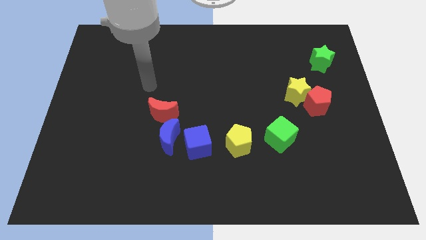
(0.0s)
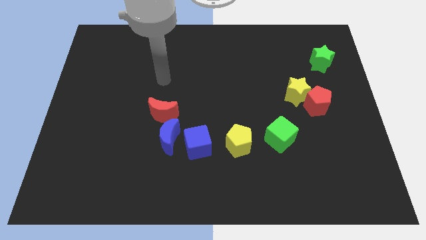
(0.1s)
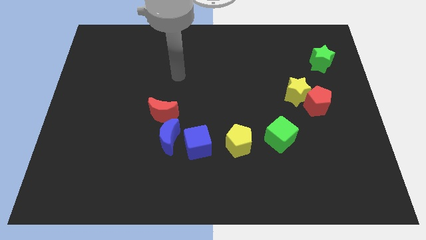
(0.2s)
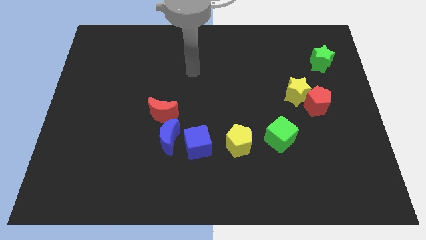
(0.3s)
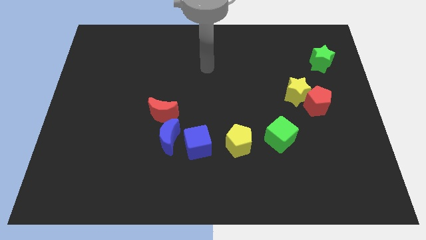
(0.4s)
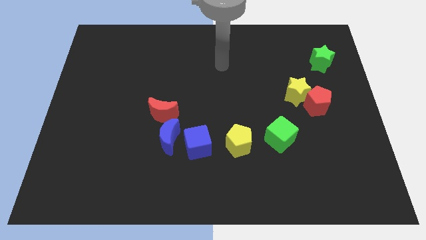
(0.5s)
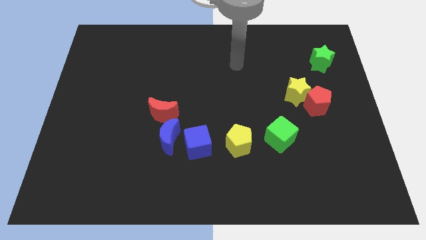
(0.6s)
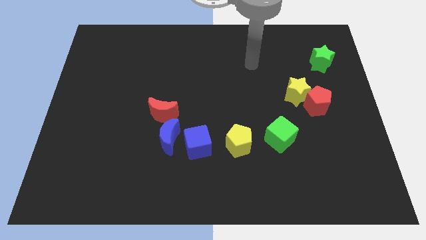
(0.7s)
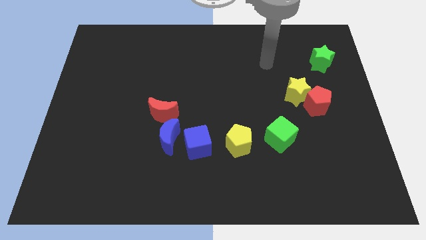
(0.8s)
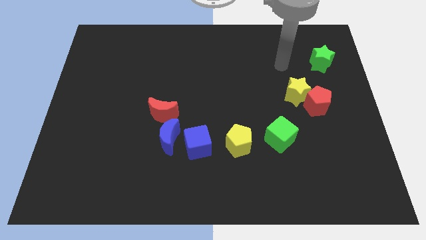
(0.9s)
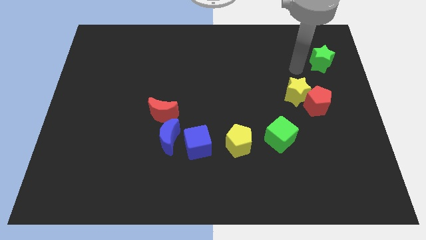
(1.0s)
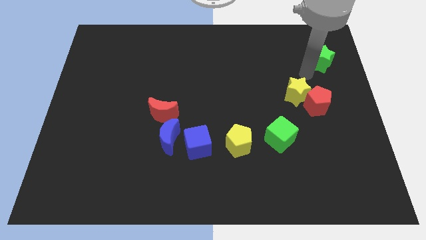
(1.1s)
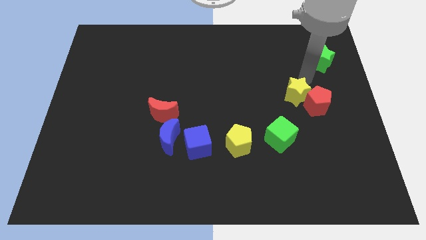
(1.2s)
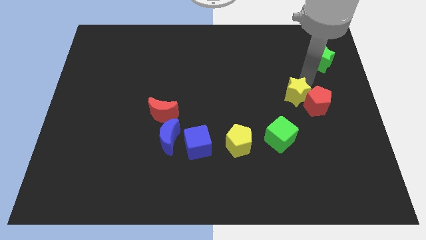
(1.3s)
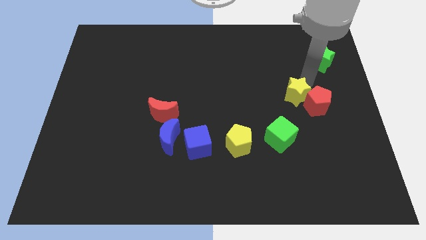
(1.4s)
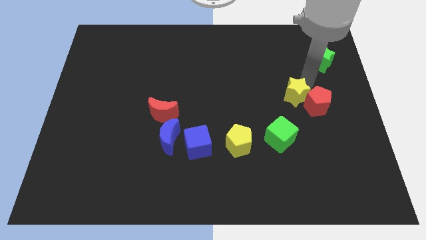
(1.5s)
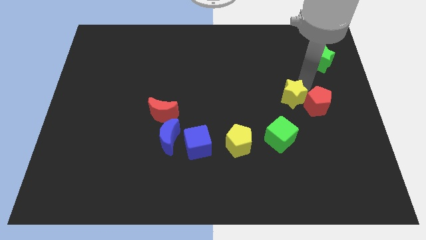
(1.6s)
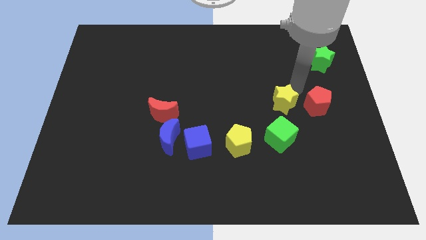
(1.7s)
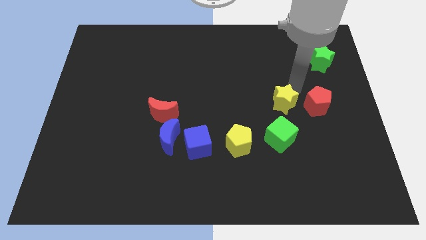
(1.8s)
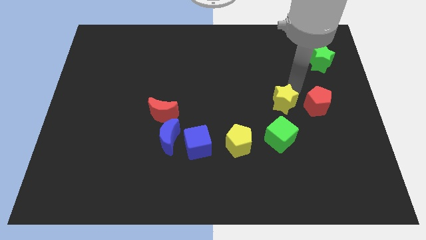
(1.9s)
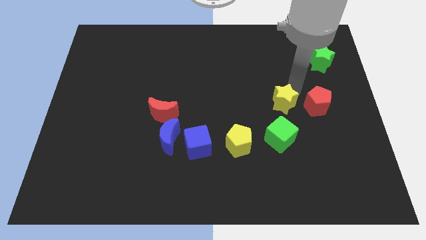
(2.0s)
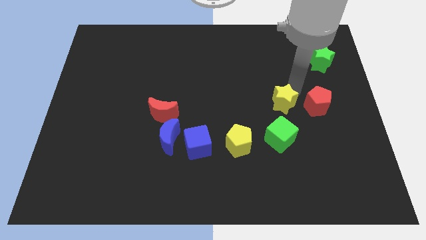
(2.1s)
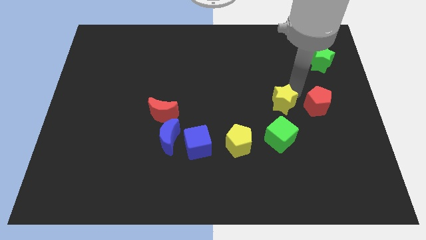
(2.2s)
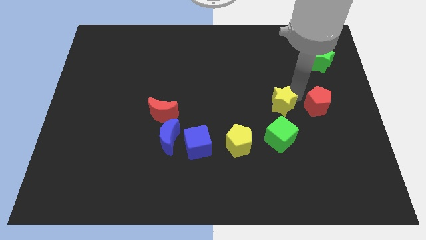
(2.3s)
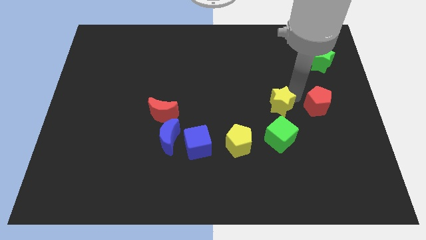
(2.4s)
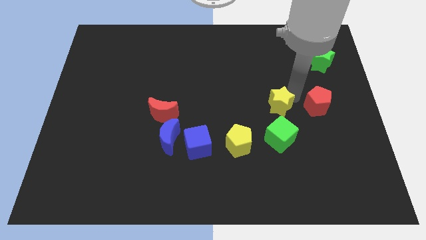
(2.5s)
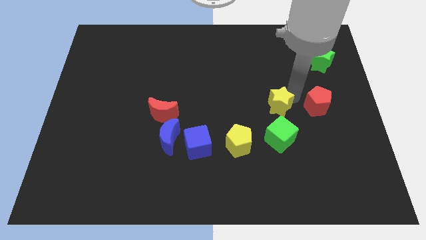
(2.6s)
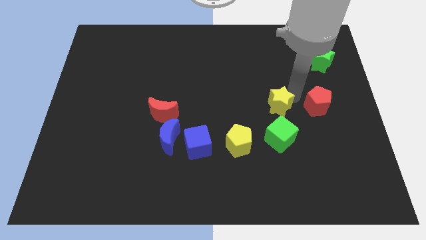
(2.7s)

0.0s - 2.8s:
move the yellow star to the left of the red pentagon

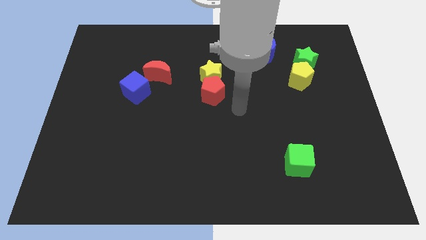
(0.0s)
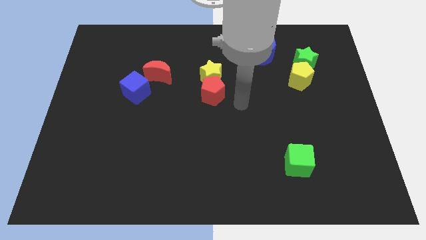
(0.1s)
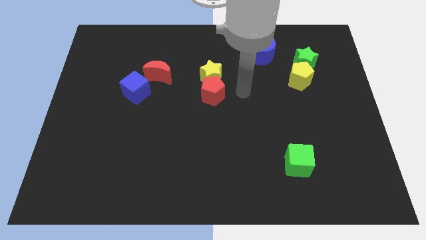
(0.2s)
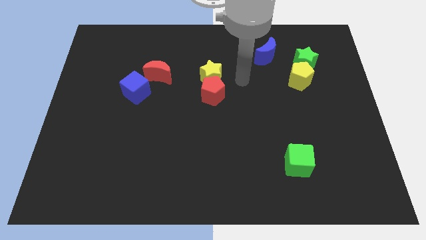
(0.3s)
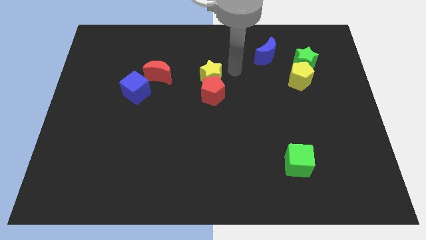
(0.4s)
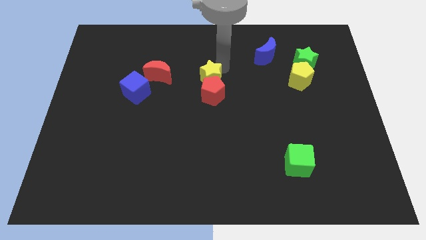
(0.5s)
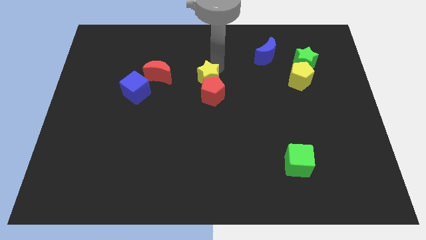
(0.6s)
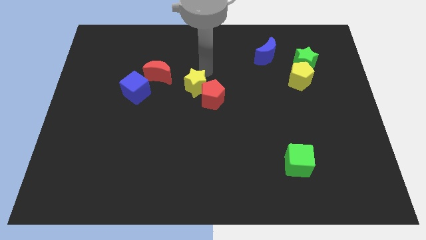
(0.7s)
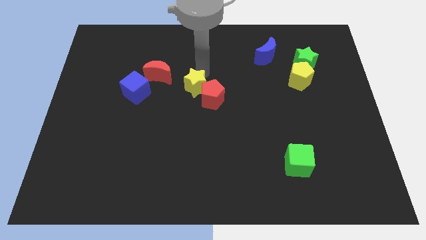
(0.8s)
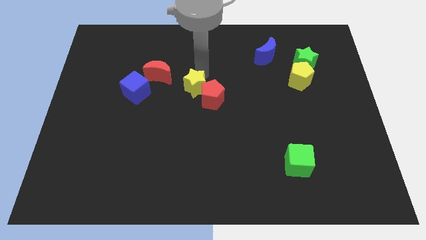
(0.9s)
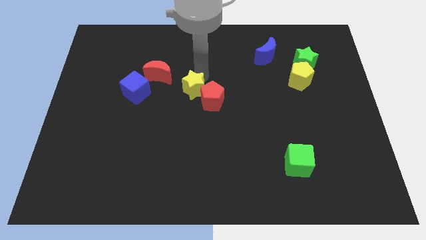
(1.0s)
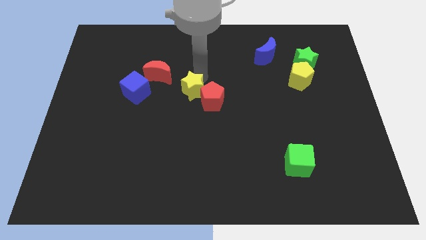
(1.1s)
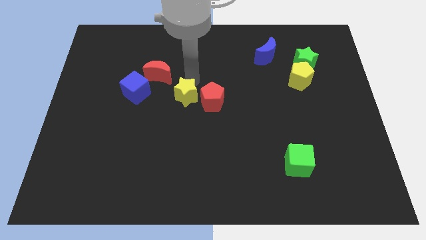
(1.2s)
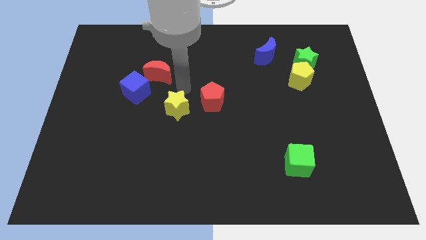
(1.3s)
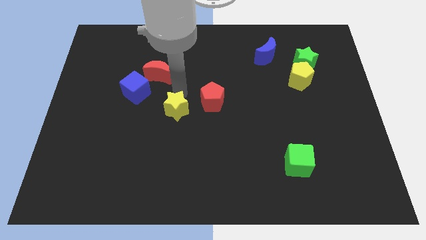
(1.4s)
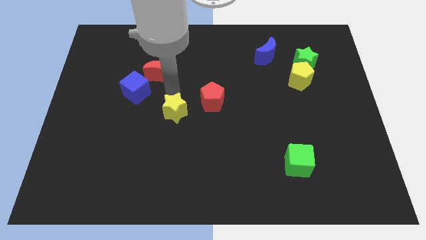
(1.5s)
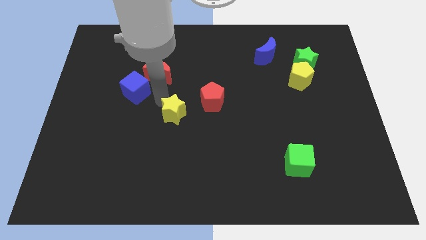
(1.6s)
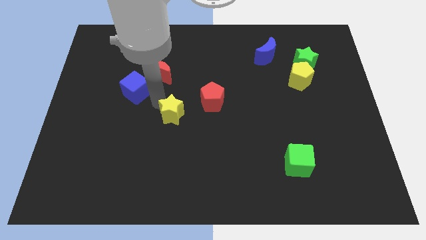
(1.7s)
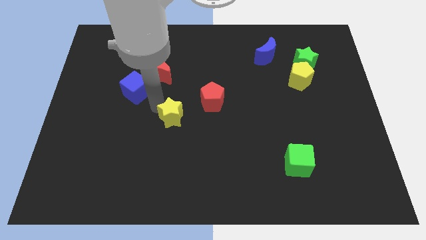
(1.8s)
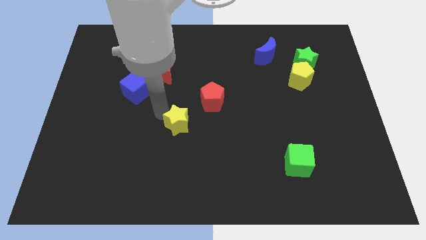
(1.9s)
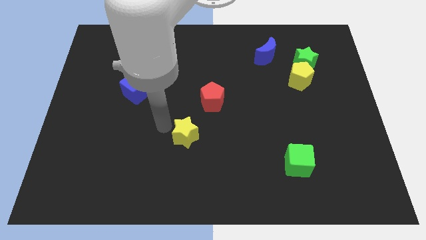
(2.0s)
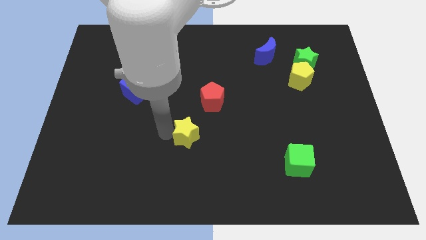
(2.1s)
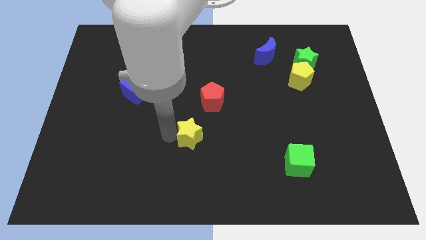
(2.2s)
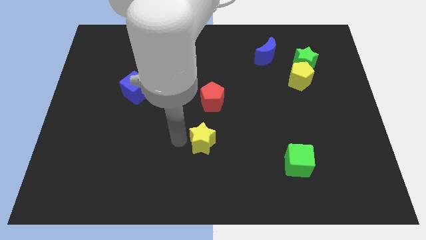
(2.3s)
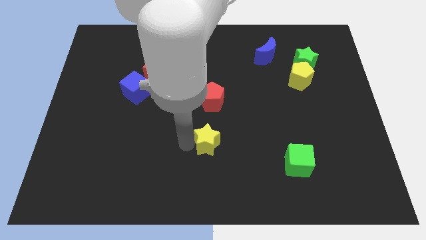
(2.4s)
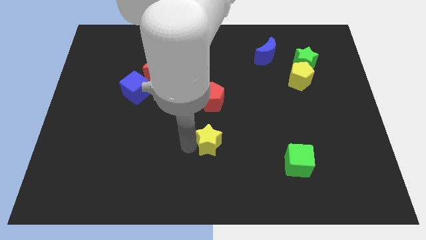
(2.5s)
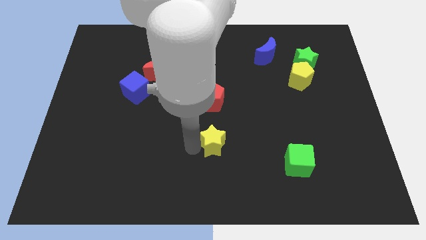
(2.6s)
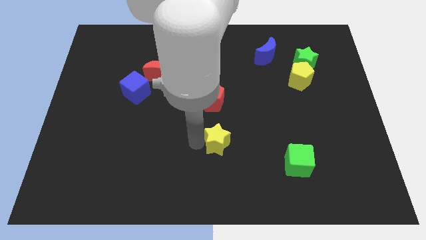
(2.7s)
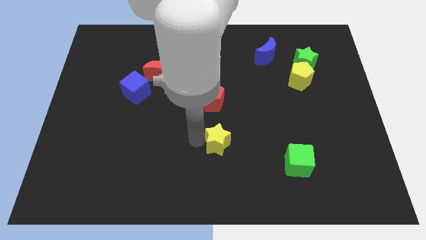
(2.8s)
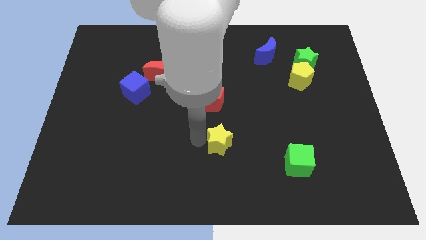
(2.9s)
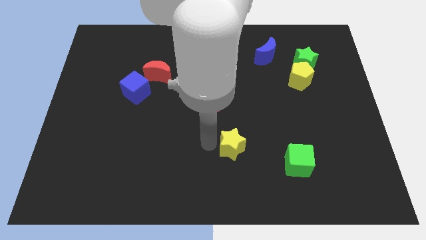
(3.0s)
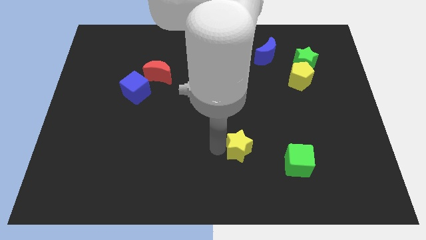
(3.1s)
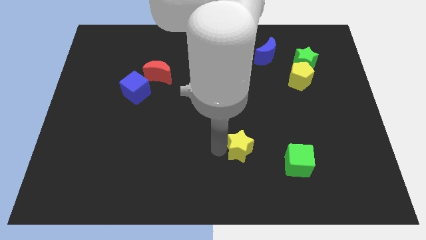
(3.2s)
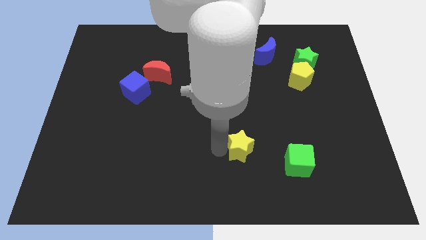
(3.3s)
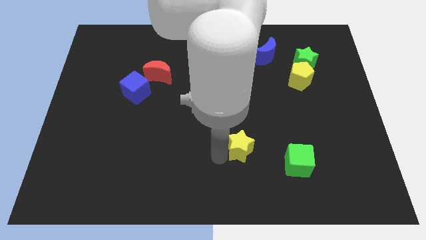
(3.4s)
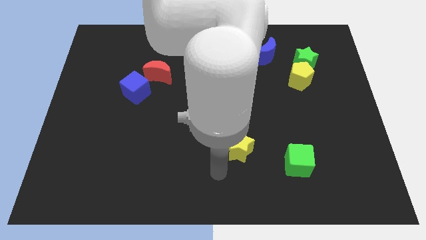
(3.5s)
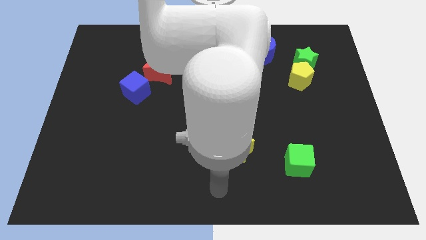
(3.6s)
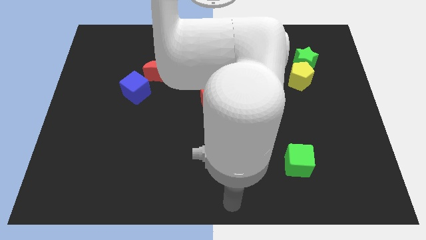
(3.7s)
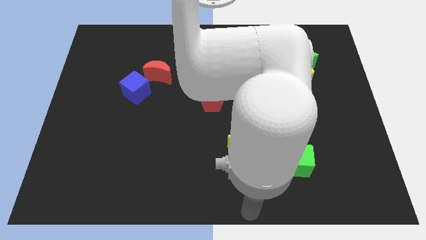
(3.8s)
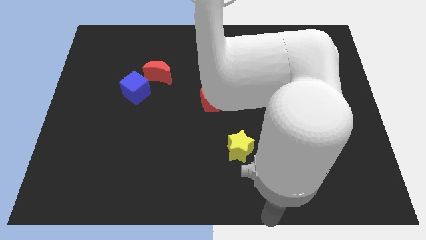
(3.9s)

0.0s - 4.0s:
move the yellow star diagonal top left to the green cube

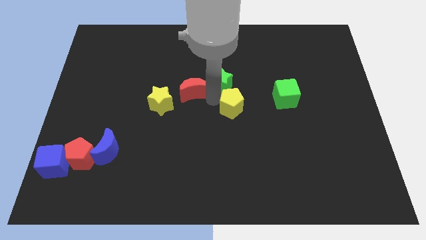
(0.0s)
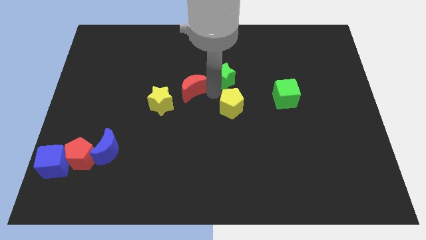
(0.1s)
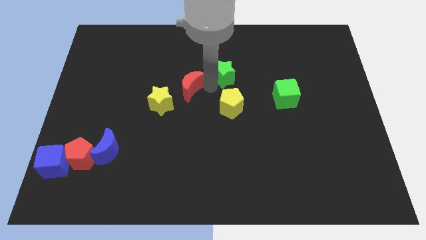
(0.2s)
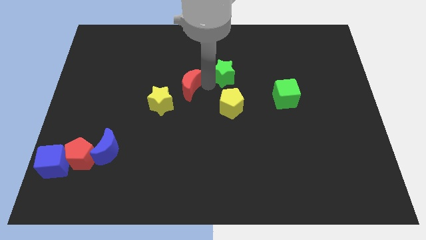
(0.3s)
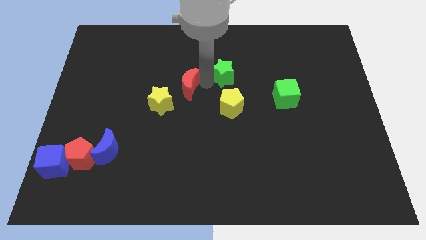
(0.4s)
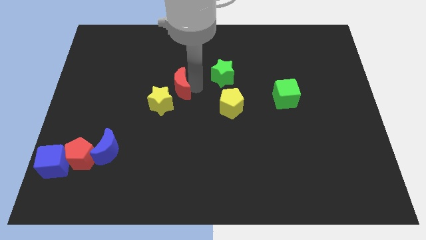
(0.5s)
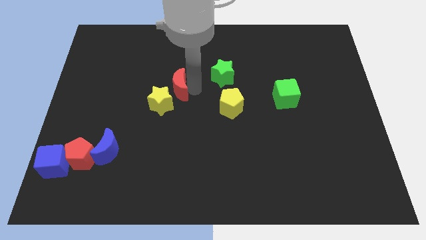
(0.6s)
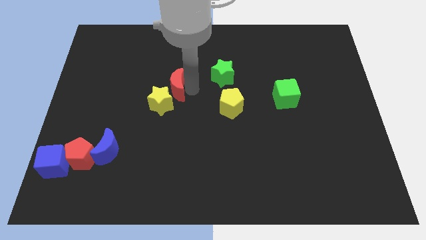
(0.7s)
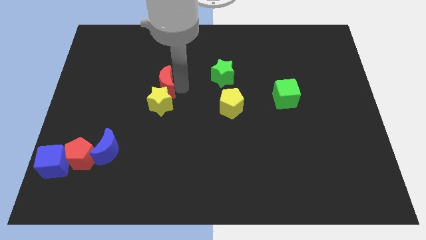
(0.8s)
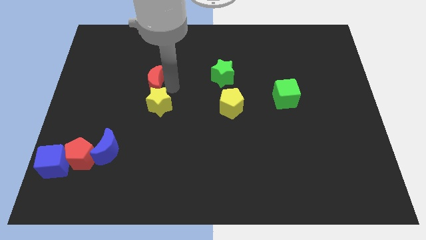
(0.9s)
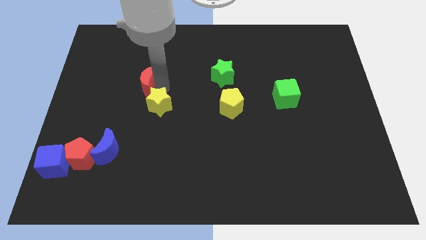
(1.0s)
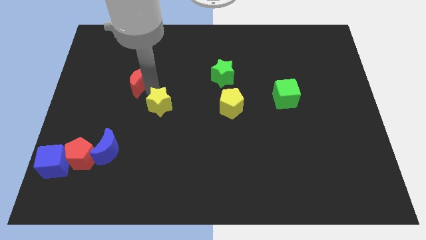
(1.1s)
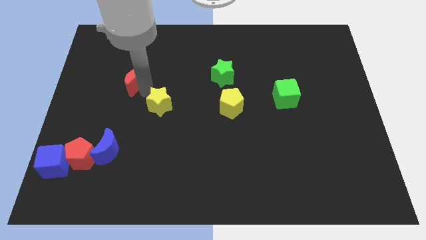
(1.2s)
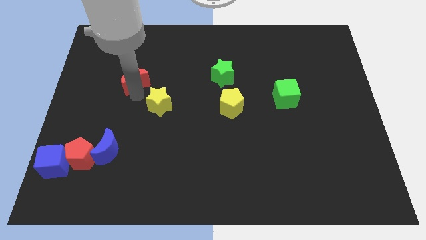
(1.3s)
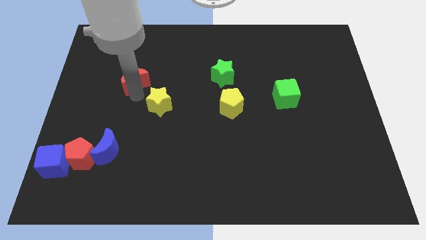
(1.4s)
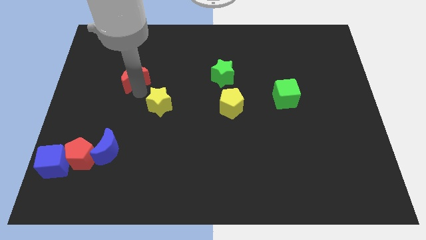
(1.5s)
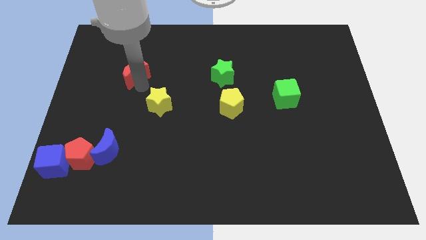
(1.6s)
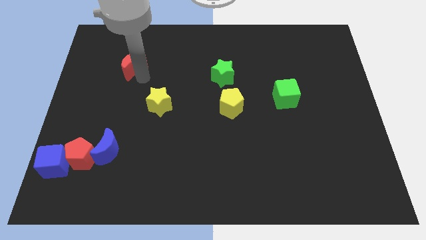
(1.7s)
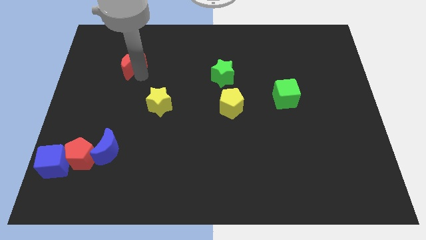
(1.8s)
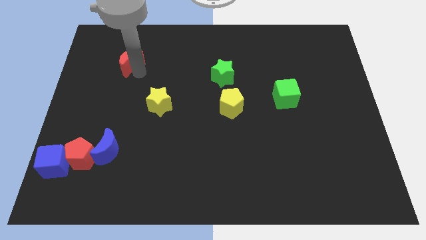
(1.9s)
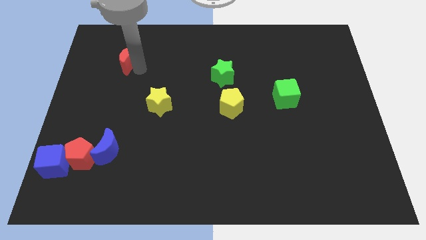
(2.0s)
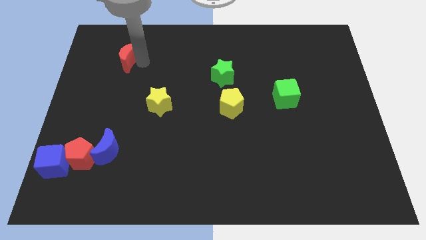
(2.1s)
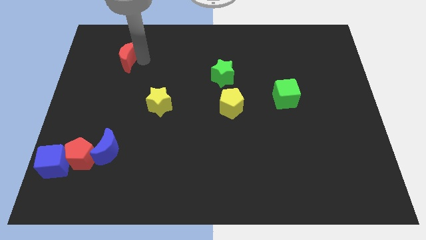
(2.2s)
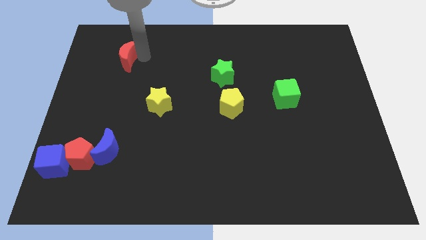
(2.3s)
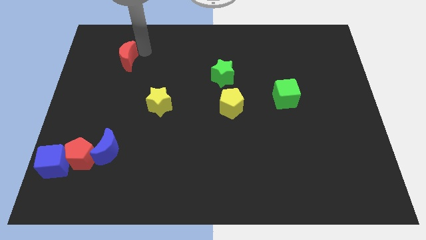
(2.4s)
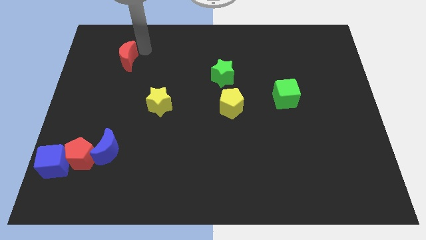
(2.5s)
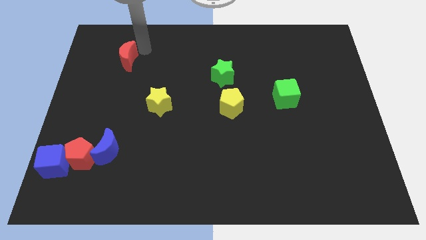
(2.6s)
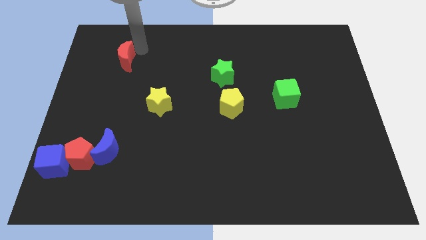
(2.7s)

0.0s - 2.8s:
push the red crescent towards top left side of the board
